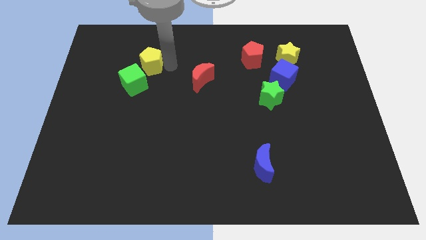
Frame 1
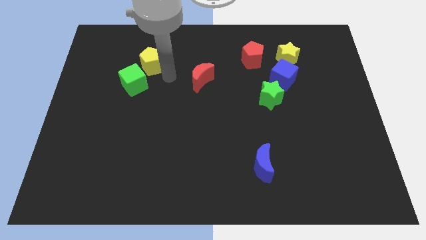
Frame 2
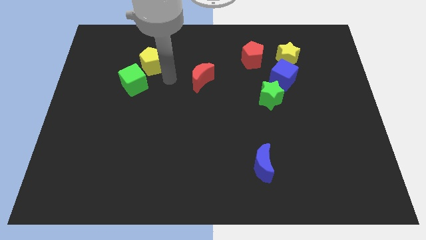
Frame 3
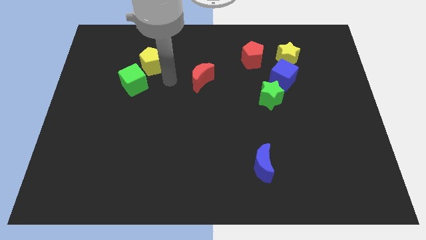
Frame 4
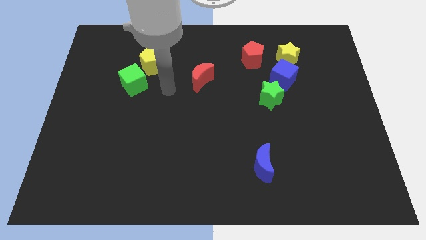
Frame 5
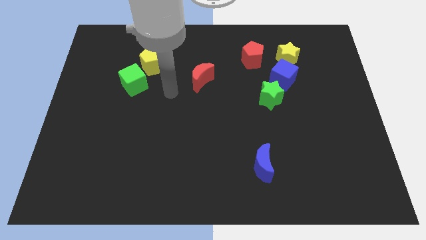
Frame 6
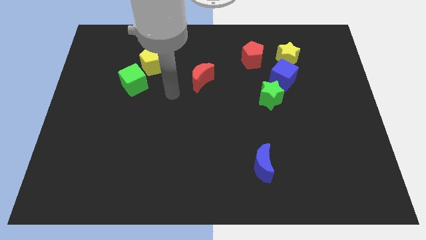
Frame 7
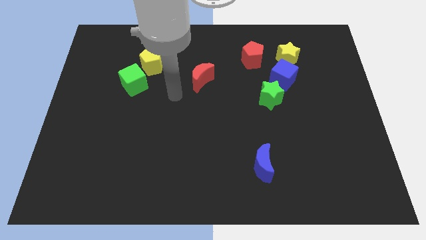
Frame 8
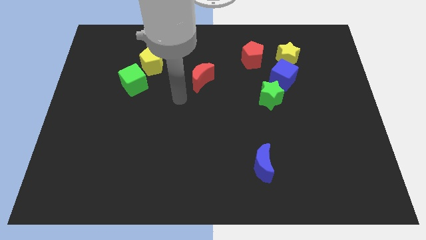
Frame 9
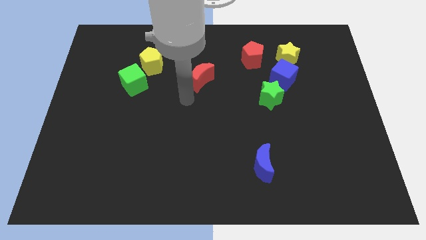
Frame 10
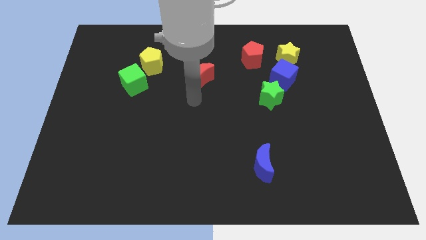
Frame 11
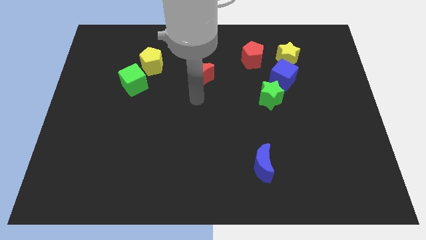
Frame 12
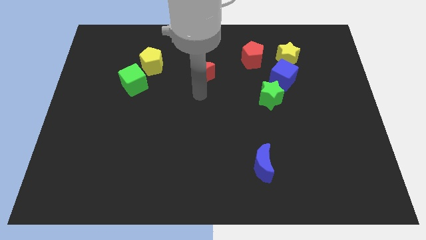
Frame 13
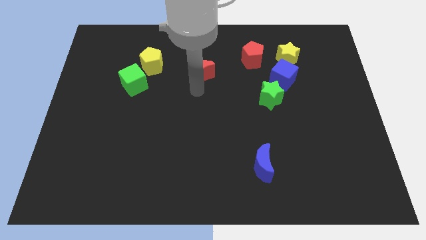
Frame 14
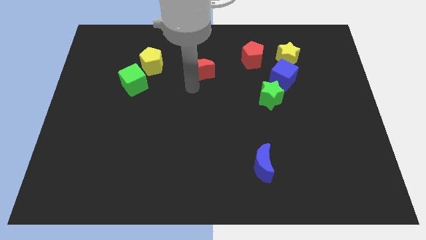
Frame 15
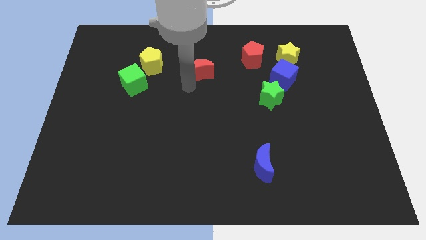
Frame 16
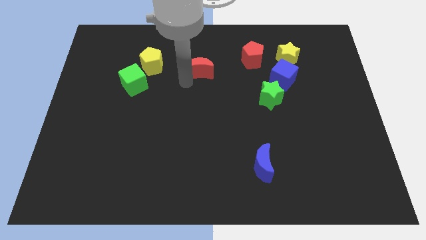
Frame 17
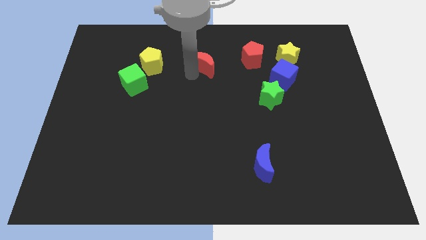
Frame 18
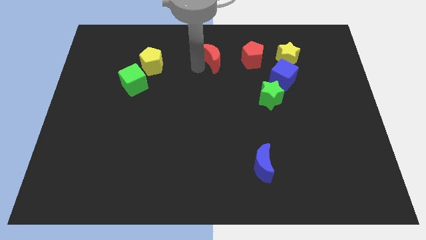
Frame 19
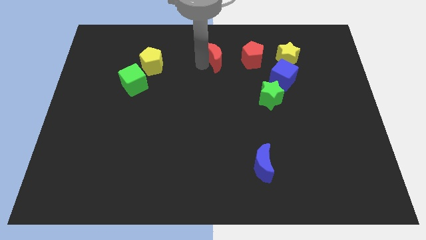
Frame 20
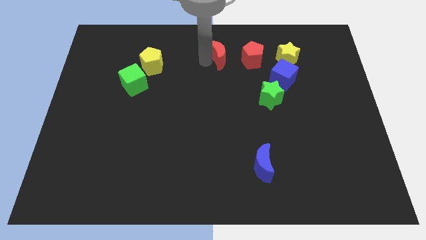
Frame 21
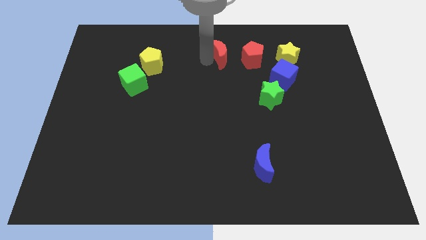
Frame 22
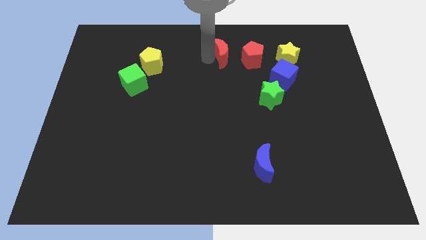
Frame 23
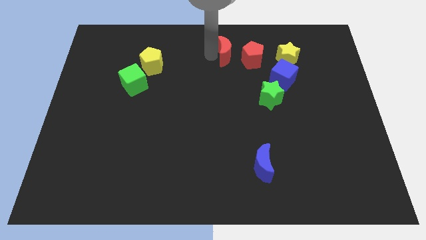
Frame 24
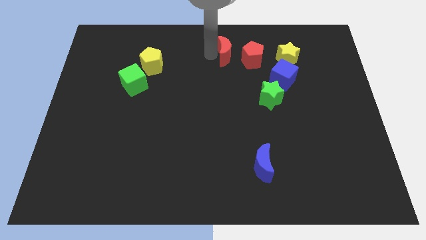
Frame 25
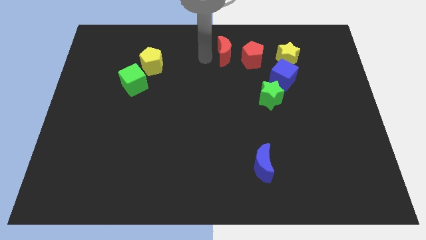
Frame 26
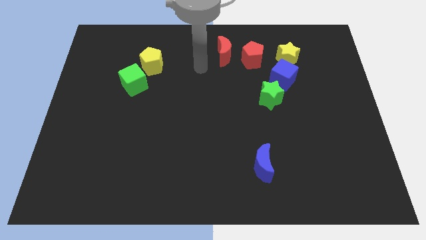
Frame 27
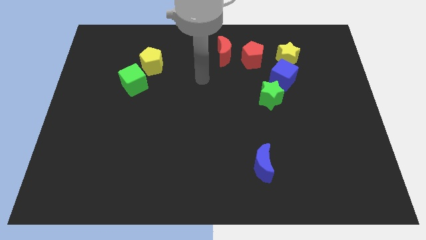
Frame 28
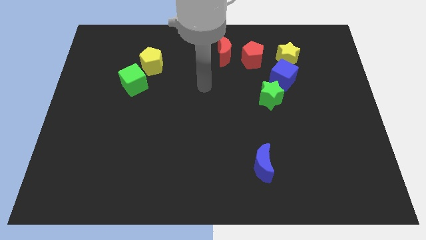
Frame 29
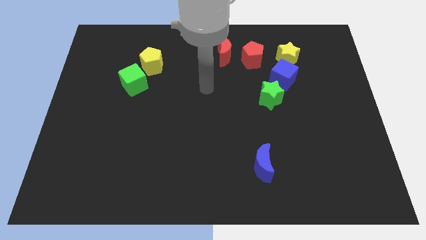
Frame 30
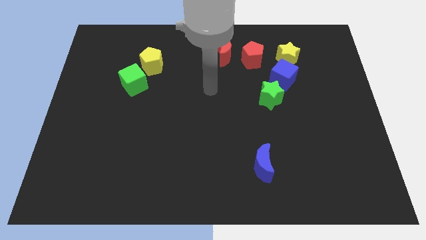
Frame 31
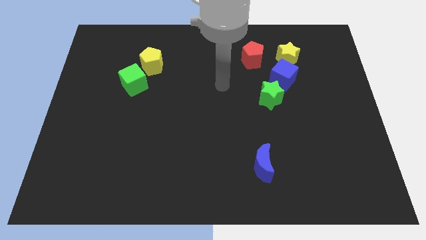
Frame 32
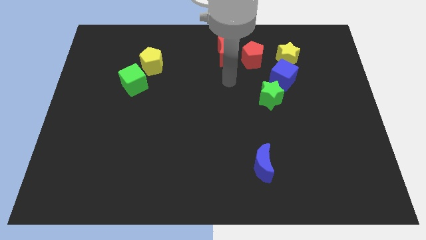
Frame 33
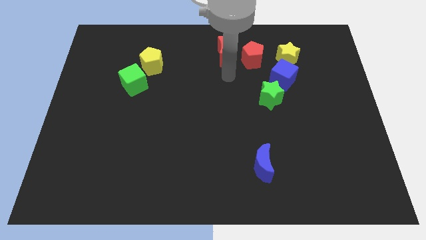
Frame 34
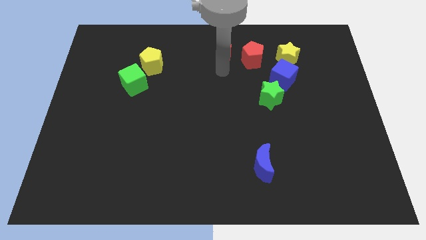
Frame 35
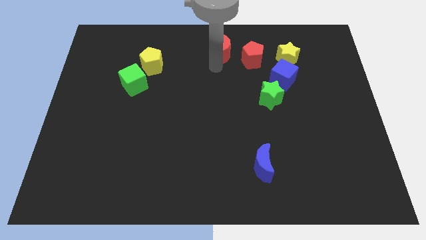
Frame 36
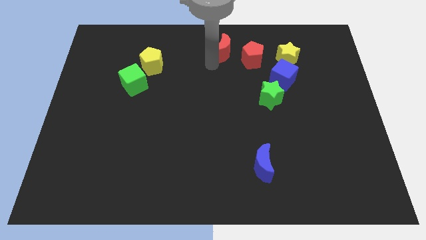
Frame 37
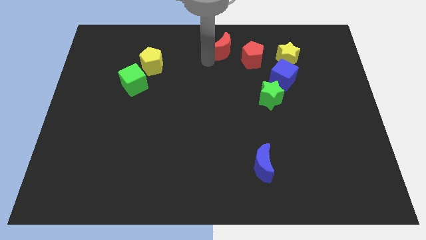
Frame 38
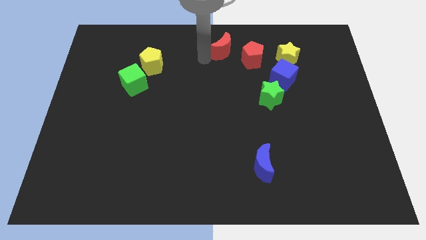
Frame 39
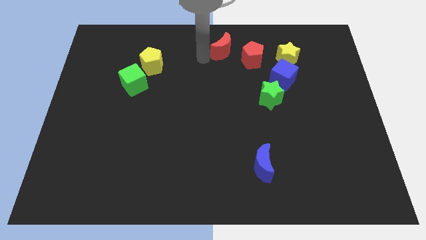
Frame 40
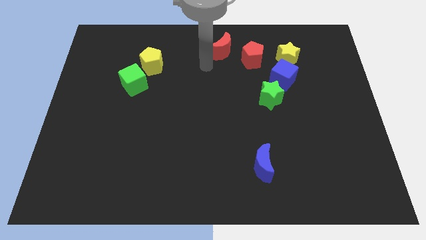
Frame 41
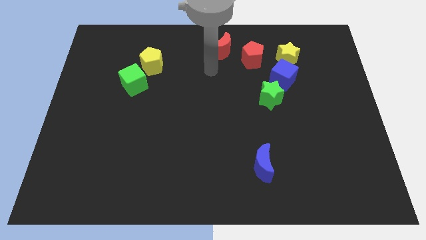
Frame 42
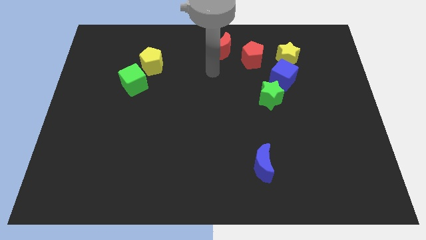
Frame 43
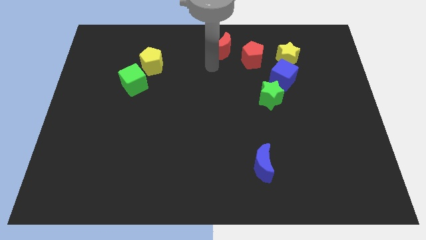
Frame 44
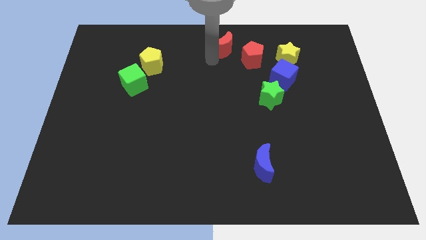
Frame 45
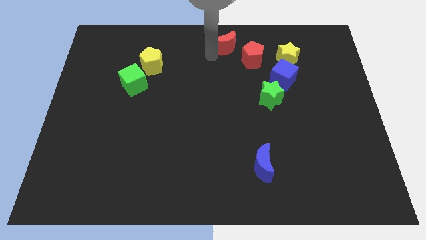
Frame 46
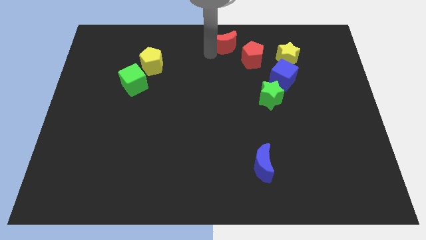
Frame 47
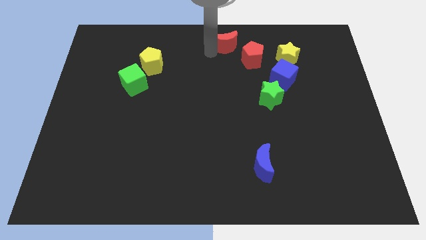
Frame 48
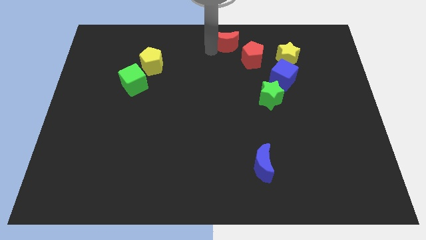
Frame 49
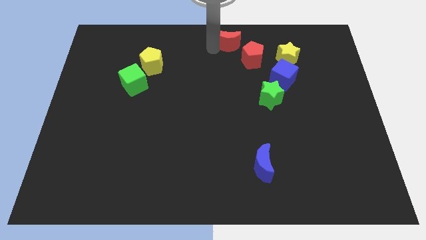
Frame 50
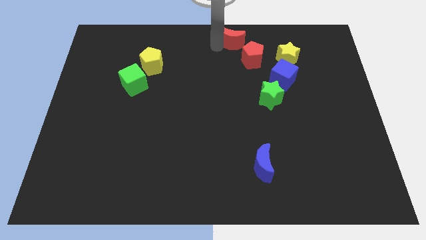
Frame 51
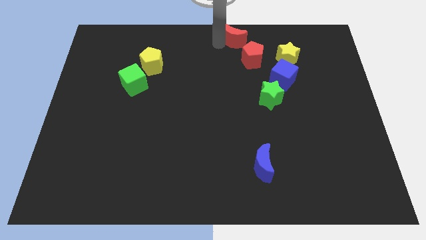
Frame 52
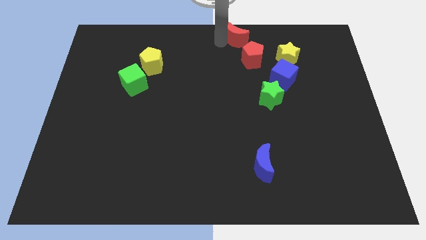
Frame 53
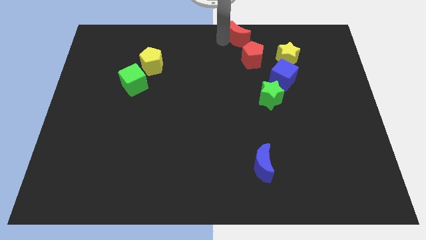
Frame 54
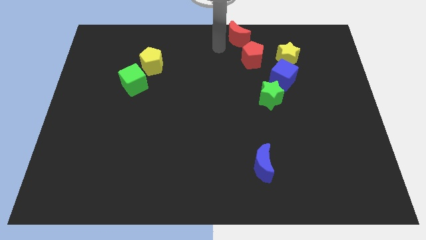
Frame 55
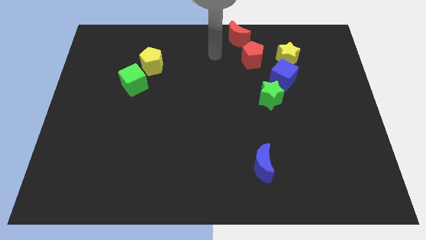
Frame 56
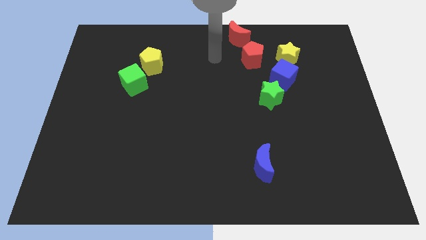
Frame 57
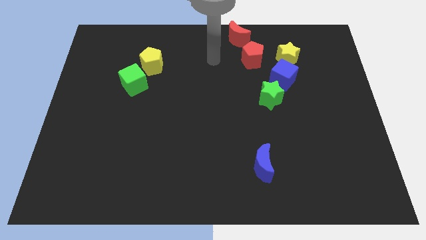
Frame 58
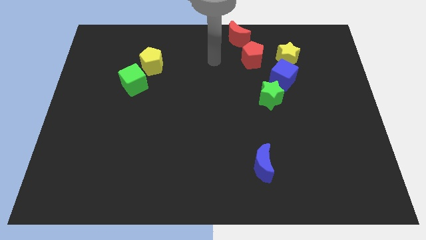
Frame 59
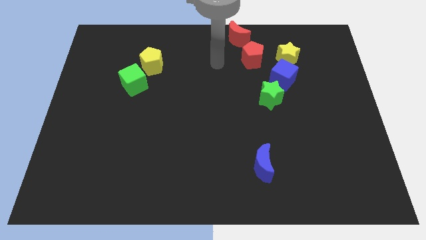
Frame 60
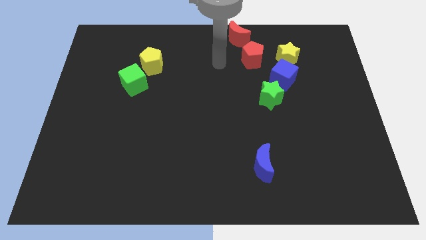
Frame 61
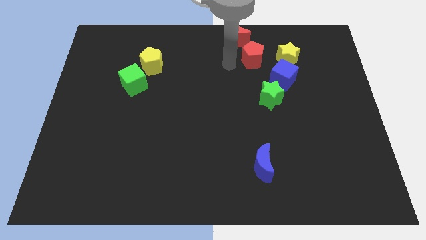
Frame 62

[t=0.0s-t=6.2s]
push the red crescent to the top of the board

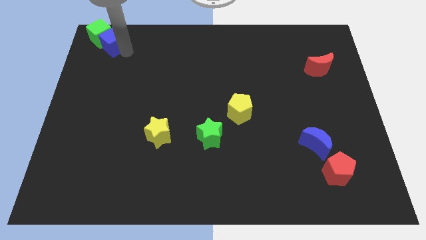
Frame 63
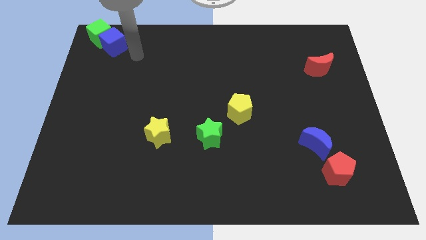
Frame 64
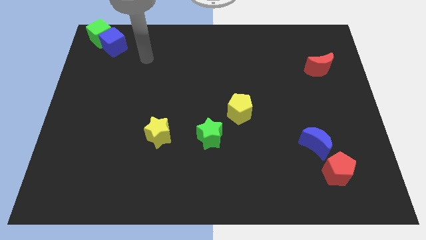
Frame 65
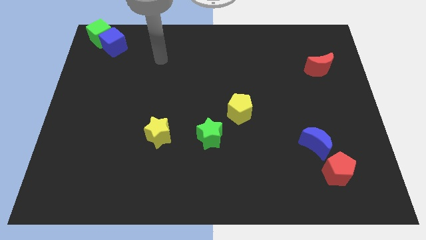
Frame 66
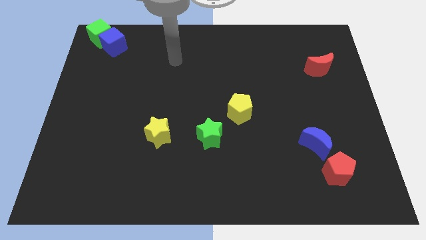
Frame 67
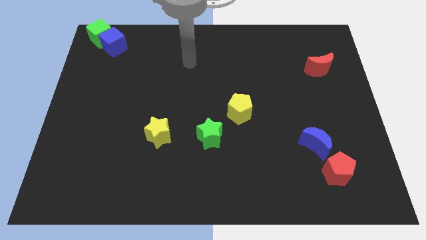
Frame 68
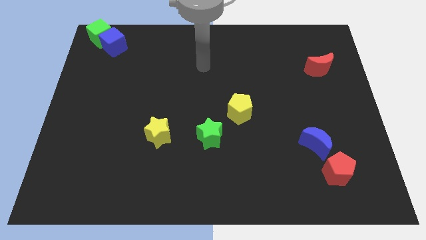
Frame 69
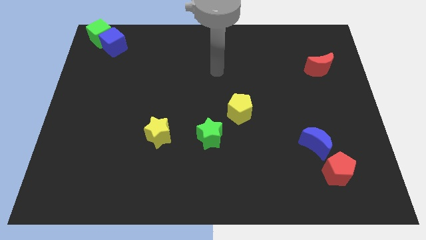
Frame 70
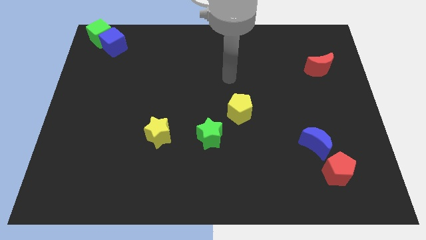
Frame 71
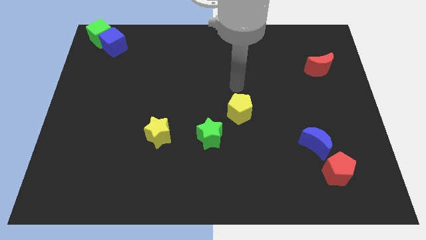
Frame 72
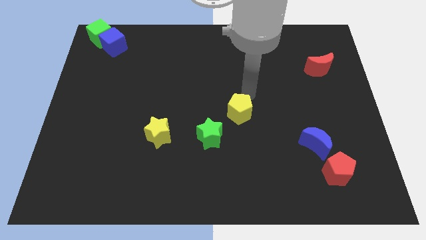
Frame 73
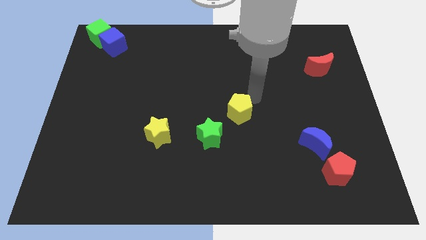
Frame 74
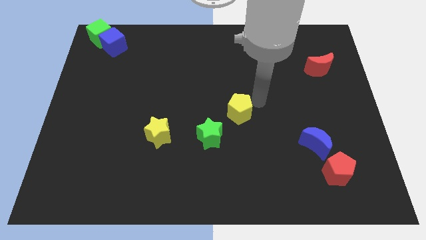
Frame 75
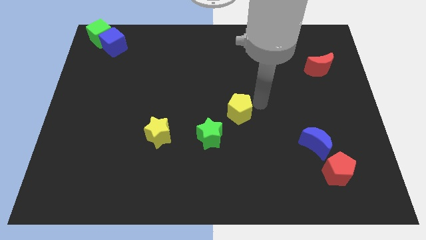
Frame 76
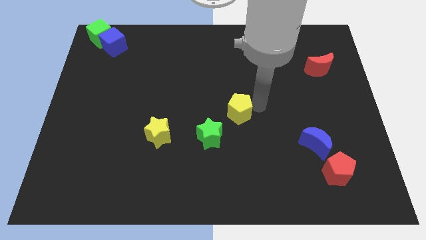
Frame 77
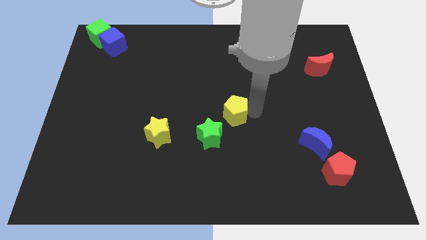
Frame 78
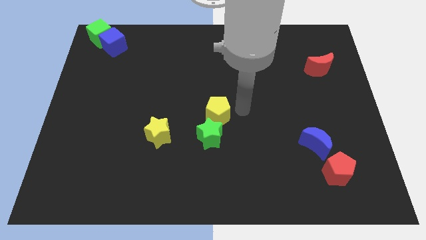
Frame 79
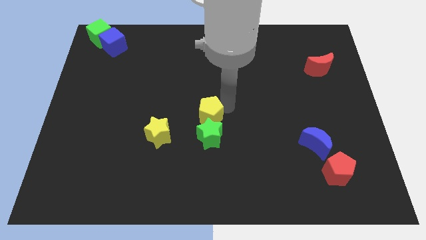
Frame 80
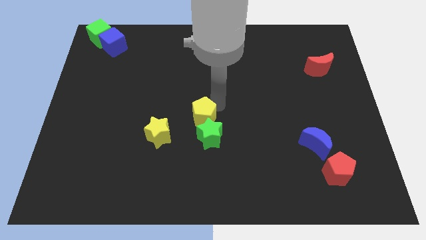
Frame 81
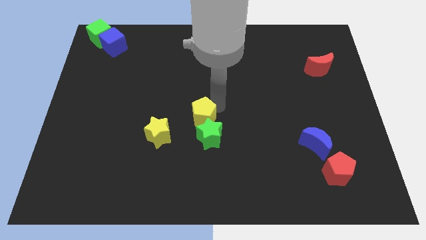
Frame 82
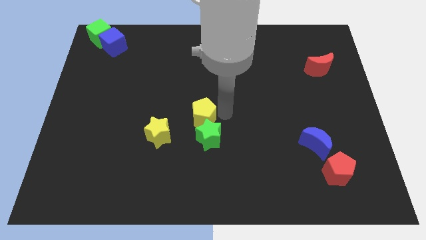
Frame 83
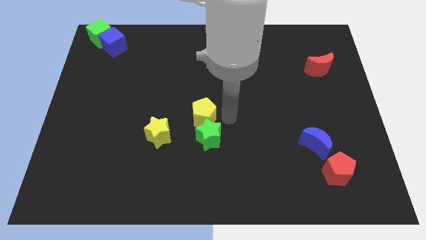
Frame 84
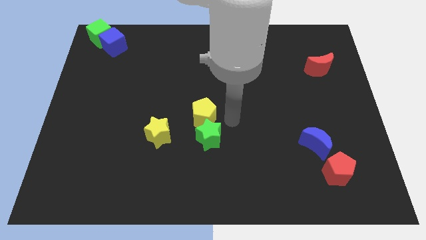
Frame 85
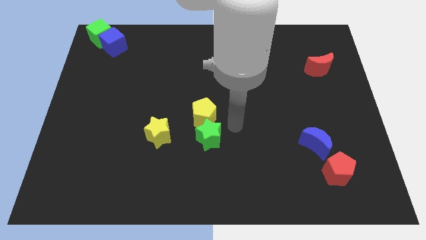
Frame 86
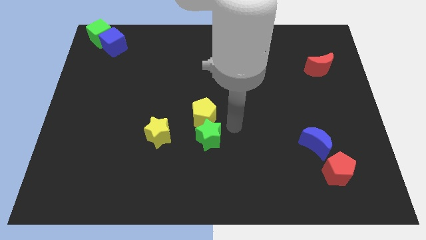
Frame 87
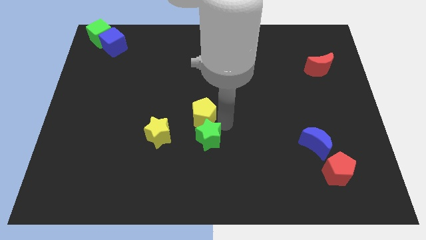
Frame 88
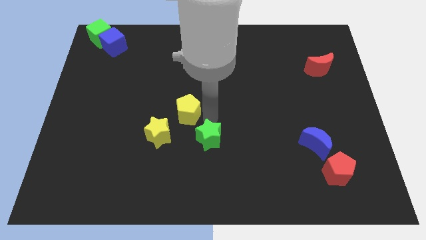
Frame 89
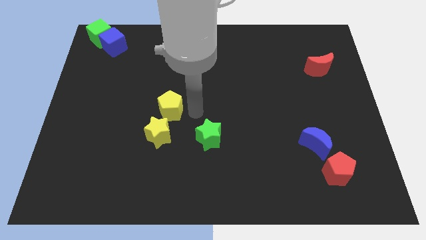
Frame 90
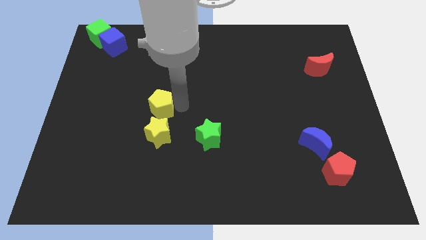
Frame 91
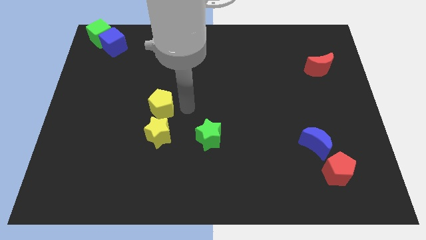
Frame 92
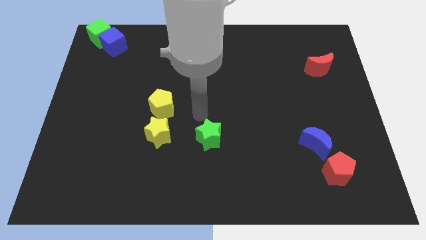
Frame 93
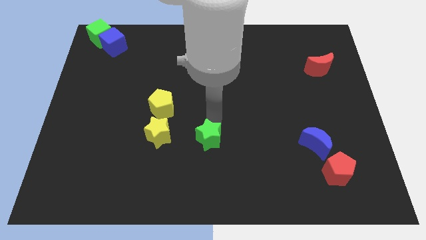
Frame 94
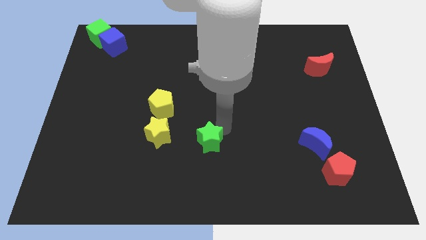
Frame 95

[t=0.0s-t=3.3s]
push the yellow pentagon towards the yellow star
